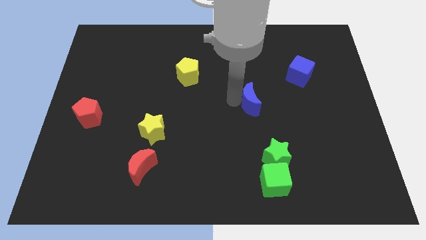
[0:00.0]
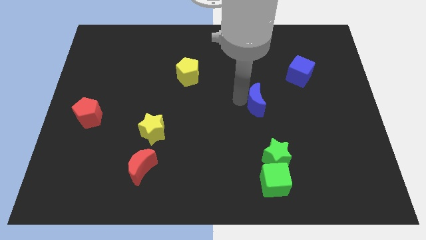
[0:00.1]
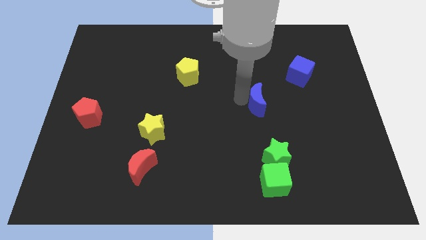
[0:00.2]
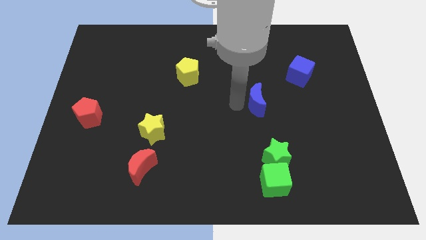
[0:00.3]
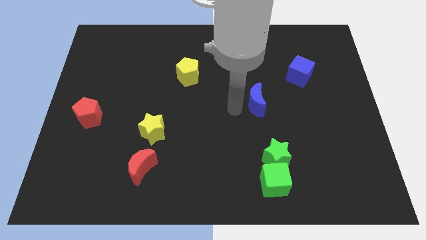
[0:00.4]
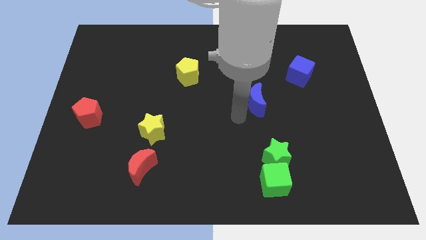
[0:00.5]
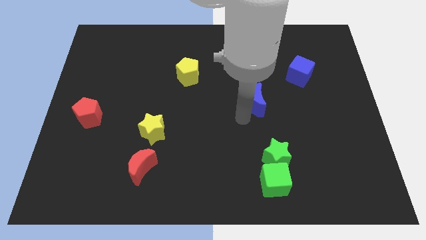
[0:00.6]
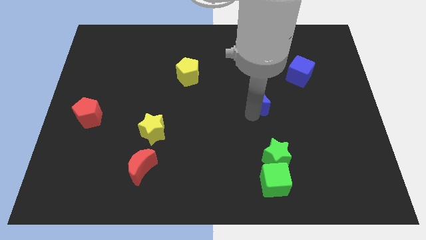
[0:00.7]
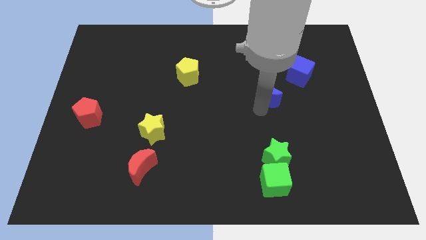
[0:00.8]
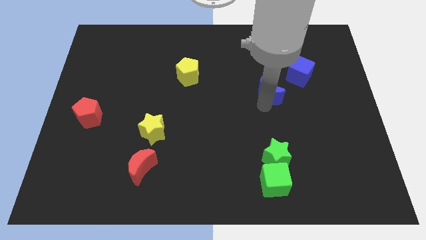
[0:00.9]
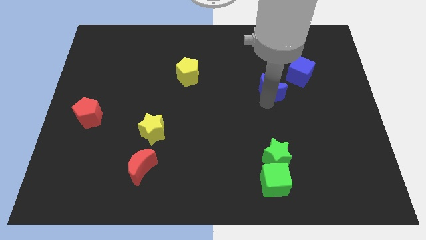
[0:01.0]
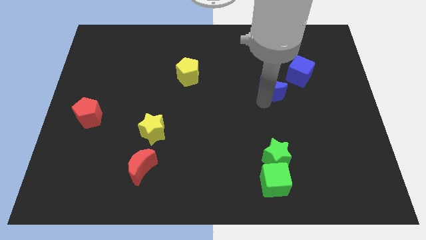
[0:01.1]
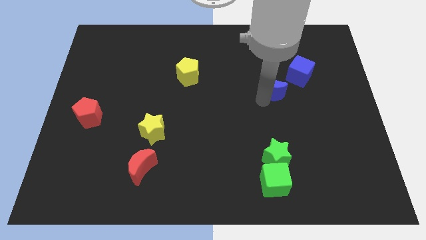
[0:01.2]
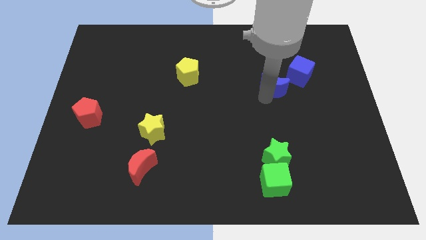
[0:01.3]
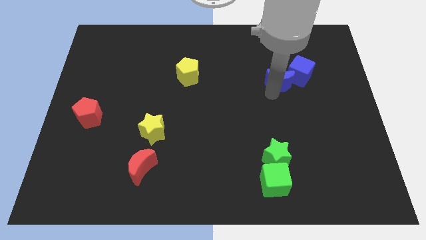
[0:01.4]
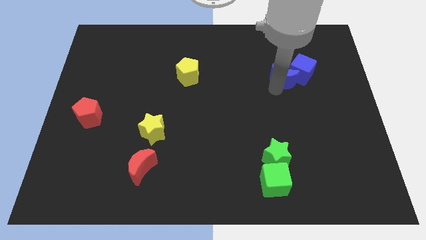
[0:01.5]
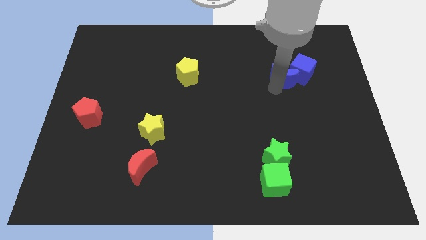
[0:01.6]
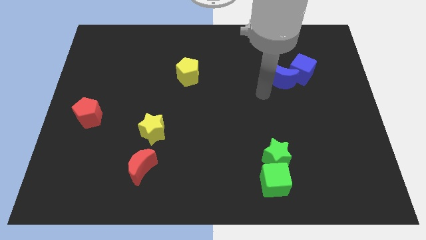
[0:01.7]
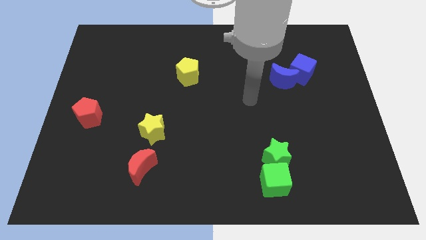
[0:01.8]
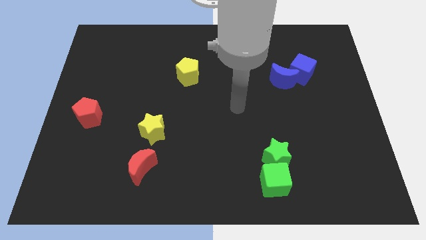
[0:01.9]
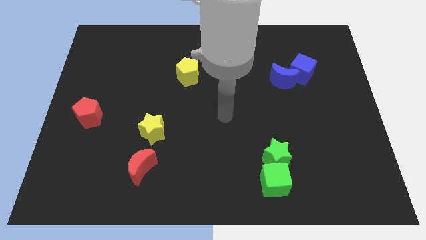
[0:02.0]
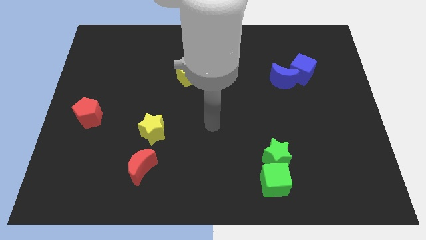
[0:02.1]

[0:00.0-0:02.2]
move blue moon into the blue cube

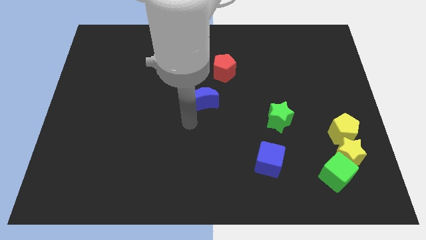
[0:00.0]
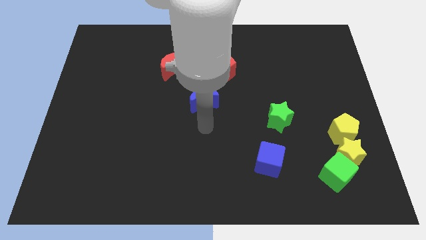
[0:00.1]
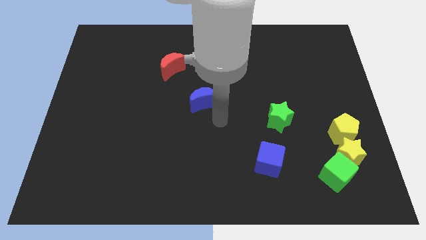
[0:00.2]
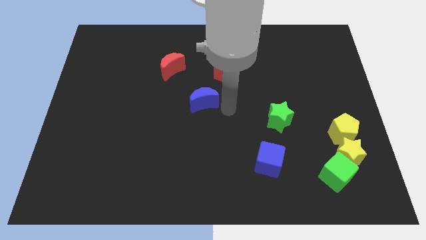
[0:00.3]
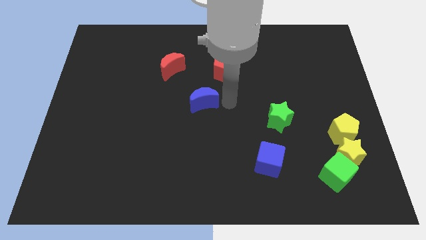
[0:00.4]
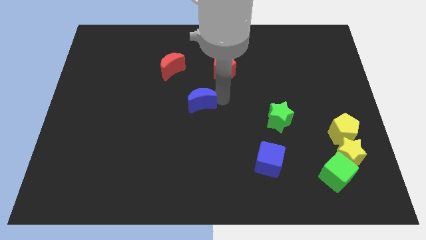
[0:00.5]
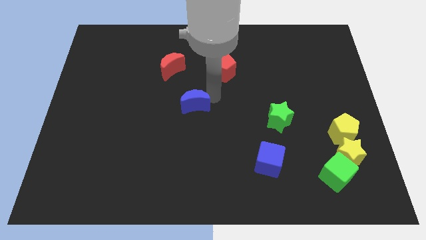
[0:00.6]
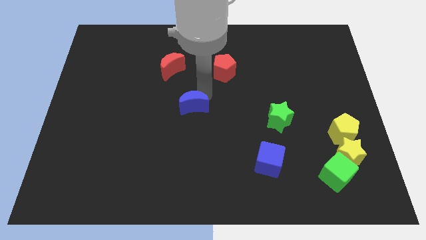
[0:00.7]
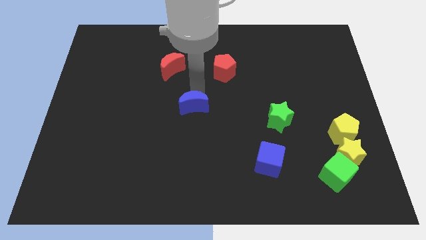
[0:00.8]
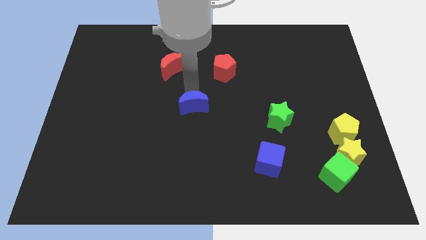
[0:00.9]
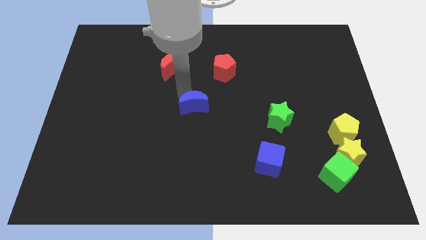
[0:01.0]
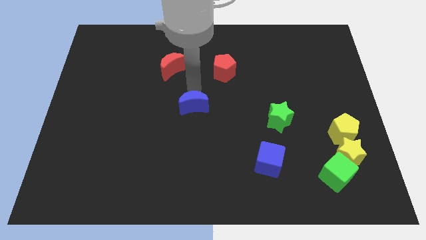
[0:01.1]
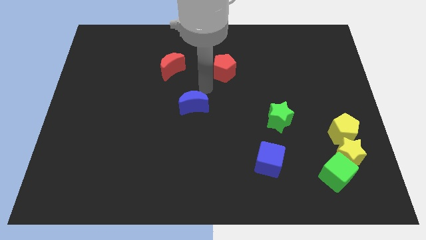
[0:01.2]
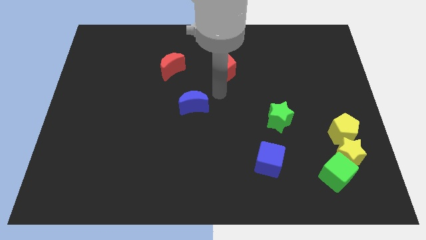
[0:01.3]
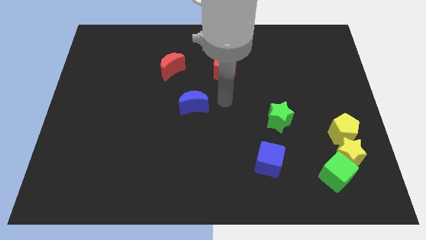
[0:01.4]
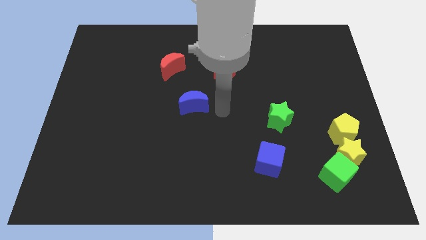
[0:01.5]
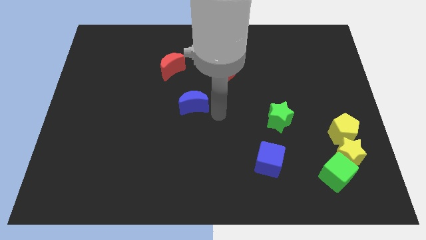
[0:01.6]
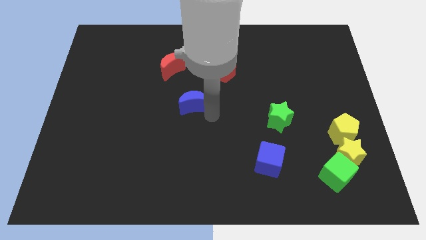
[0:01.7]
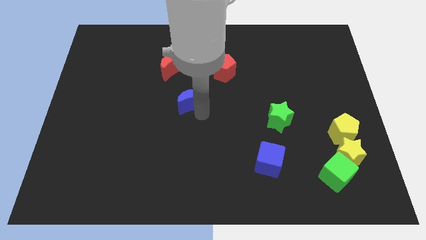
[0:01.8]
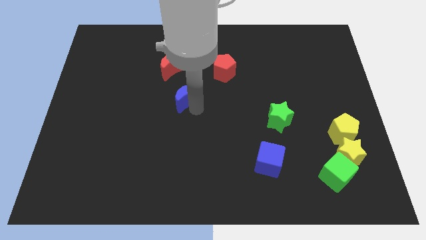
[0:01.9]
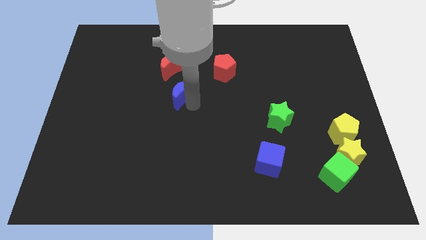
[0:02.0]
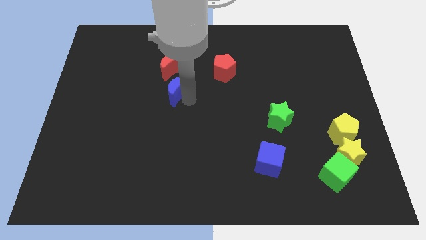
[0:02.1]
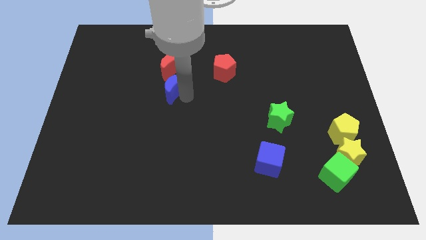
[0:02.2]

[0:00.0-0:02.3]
move blue moon towards the red moon

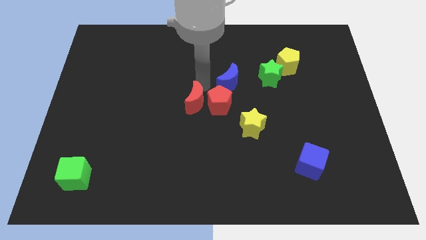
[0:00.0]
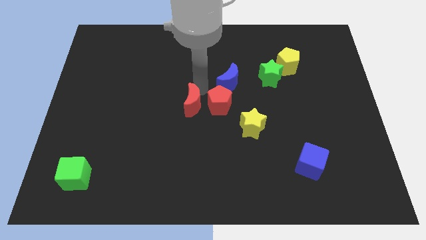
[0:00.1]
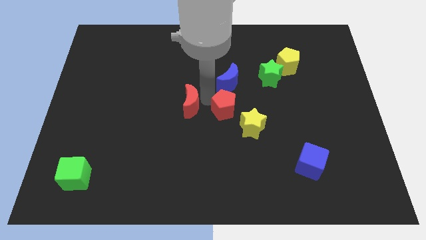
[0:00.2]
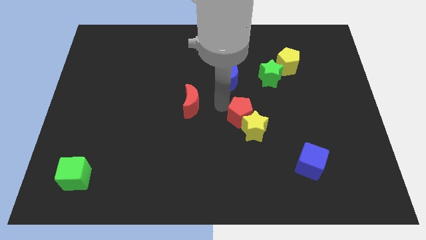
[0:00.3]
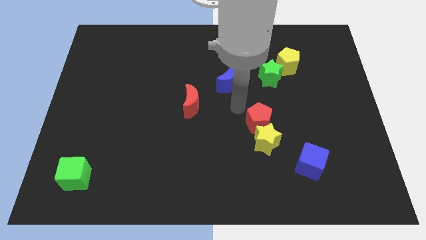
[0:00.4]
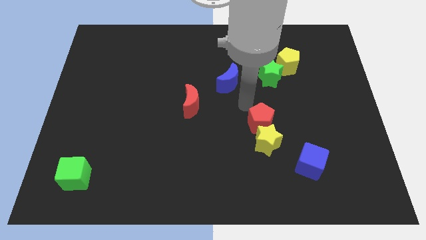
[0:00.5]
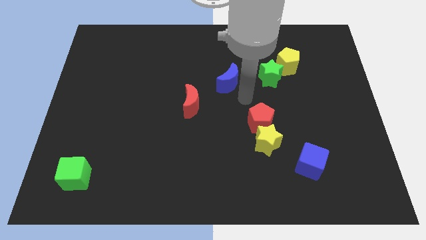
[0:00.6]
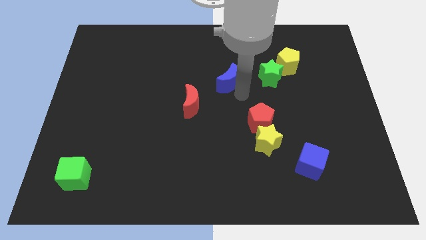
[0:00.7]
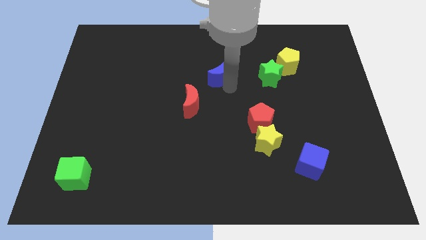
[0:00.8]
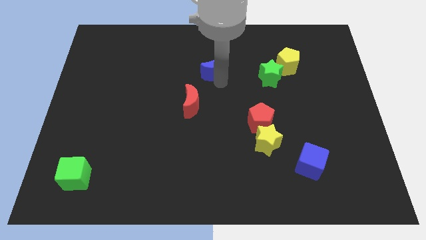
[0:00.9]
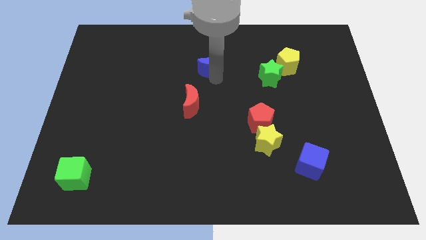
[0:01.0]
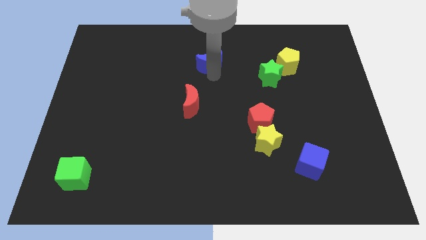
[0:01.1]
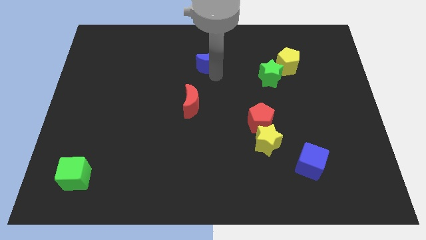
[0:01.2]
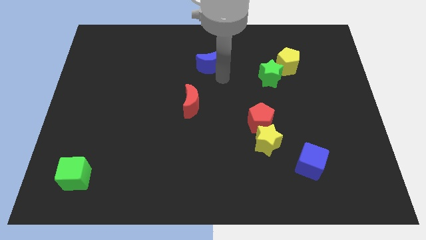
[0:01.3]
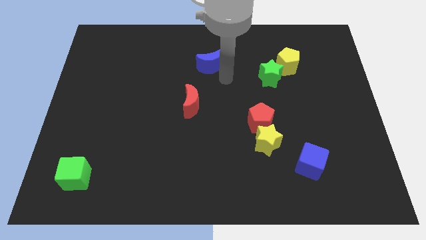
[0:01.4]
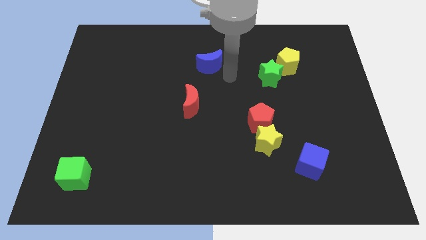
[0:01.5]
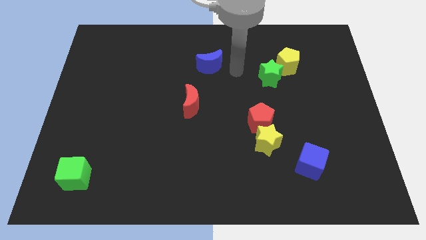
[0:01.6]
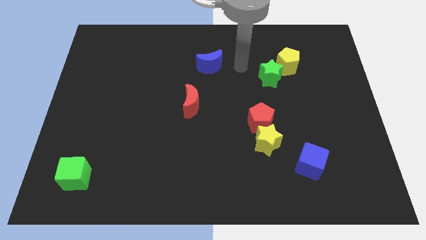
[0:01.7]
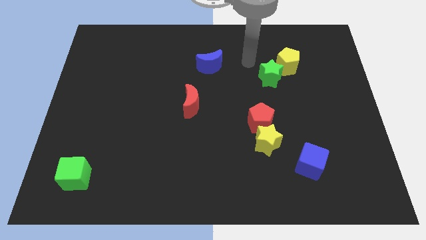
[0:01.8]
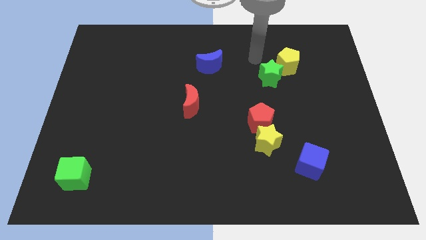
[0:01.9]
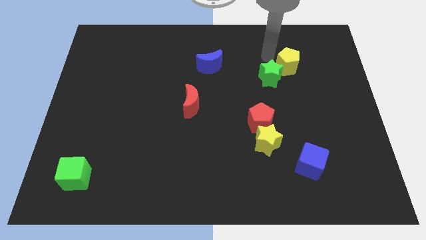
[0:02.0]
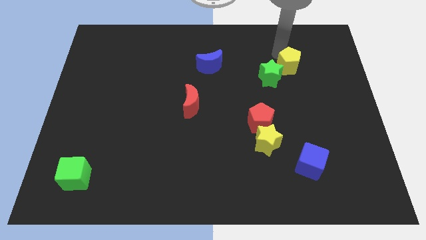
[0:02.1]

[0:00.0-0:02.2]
separate the red pentagon away from the blue crescent

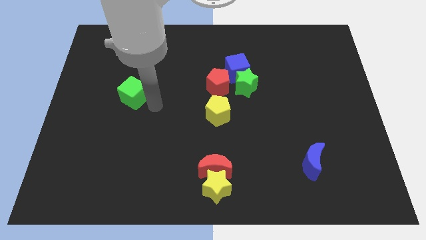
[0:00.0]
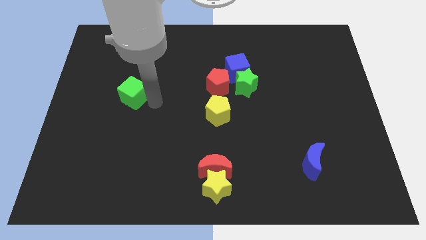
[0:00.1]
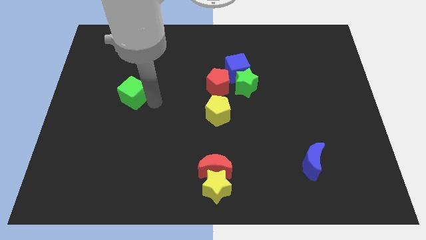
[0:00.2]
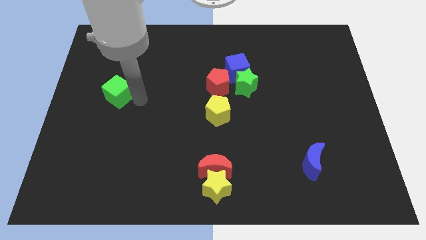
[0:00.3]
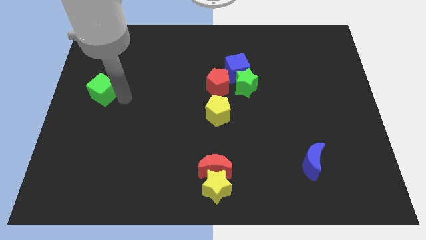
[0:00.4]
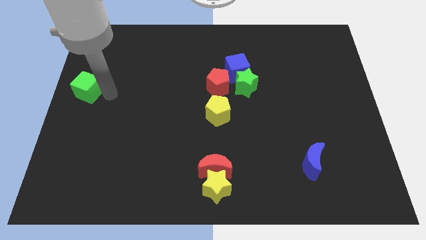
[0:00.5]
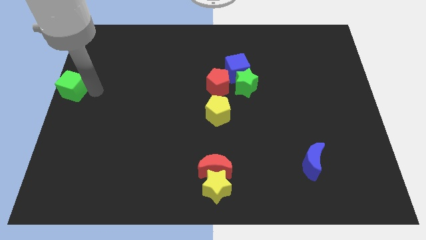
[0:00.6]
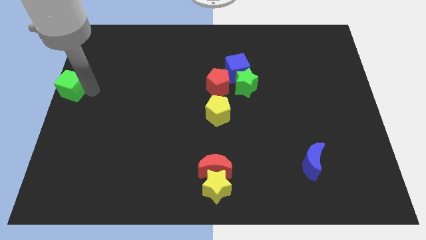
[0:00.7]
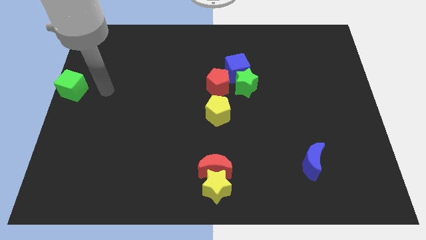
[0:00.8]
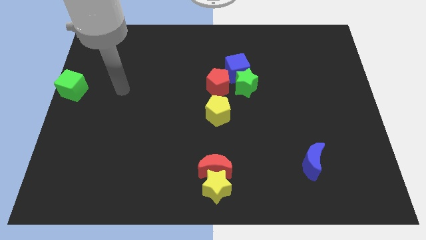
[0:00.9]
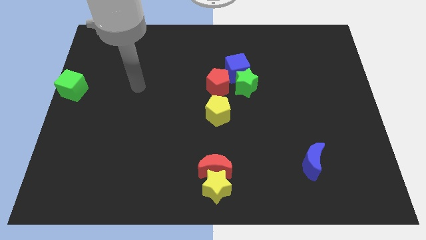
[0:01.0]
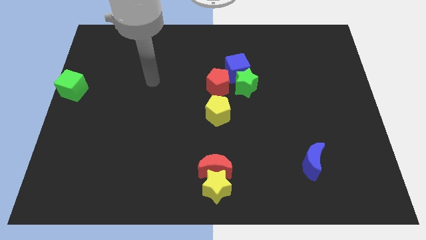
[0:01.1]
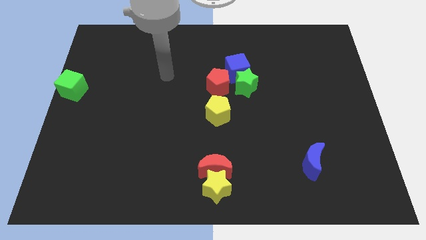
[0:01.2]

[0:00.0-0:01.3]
move green cube to the left center of the board

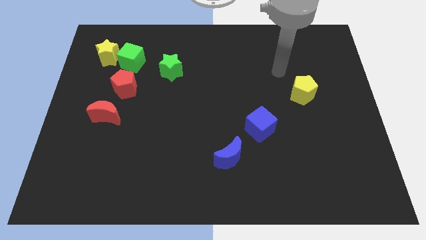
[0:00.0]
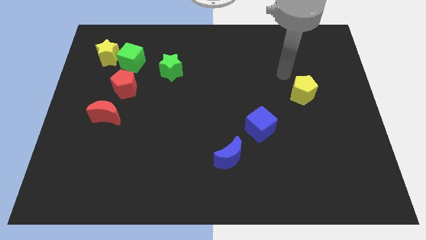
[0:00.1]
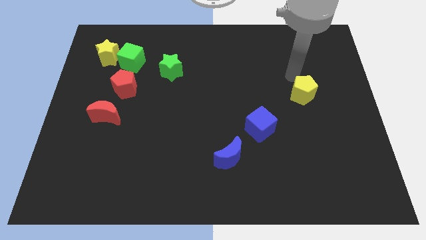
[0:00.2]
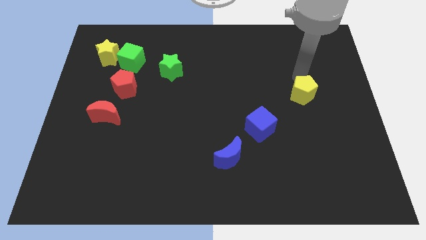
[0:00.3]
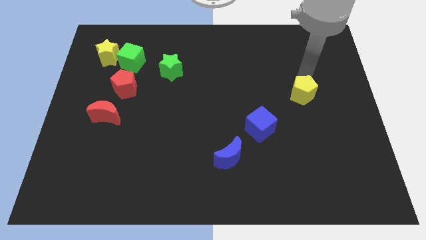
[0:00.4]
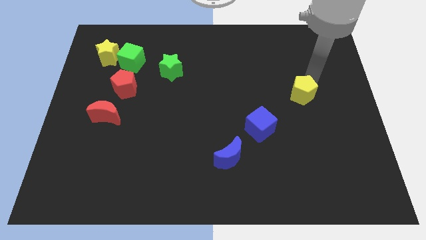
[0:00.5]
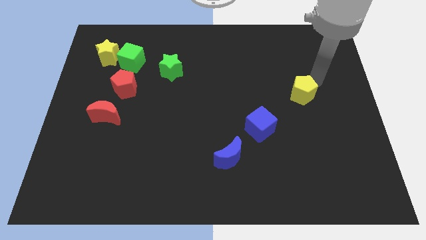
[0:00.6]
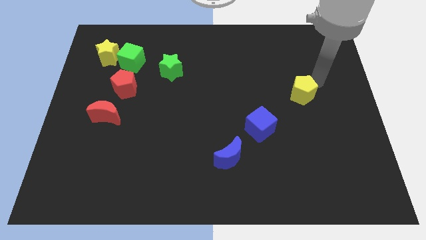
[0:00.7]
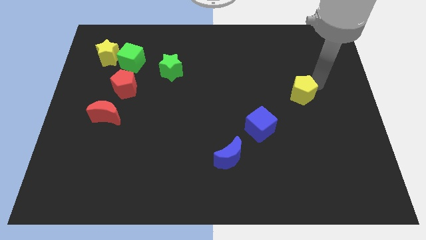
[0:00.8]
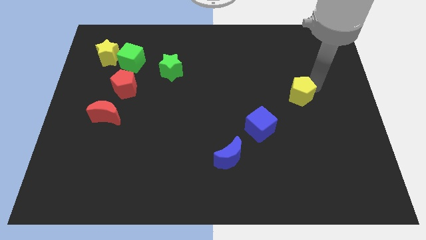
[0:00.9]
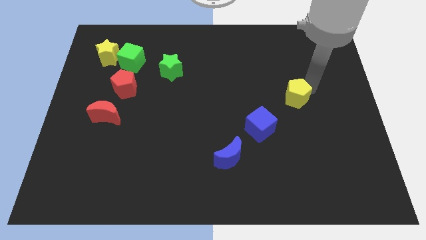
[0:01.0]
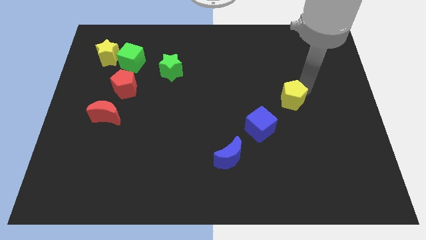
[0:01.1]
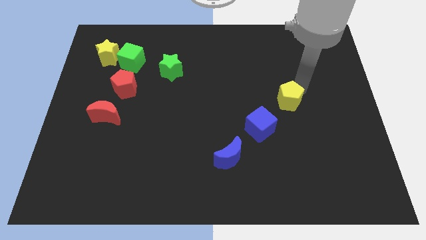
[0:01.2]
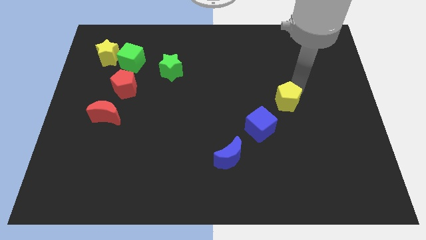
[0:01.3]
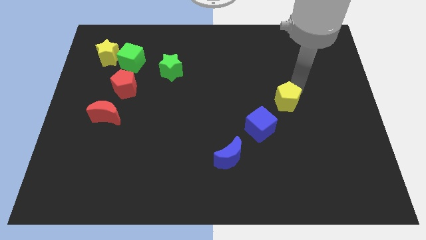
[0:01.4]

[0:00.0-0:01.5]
push the yellow pentagon towards the blue cube
